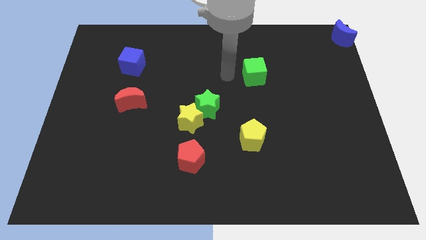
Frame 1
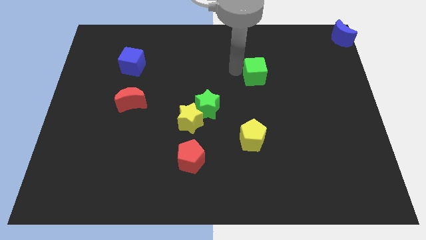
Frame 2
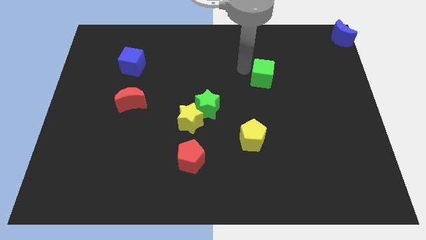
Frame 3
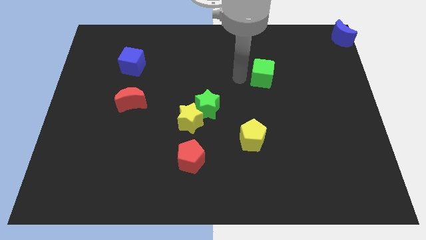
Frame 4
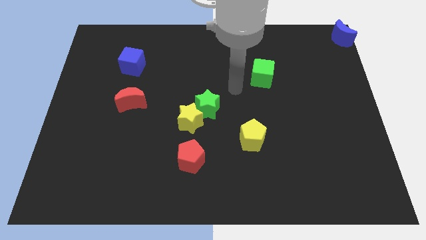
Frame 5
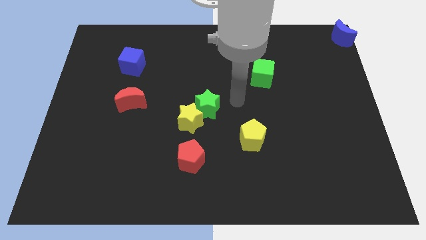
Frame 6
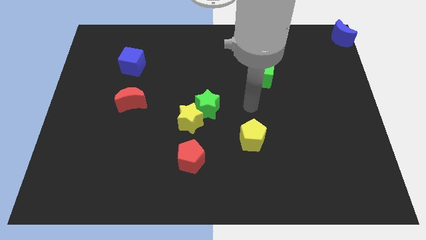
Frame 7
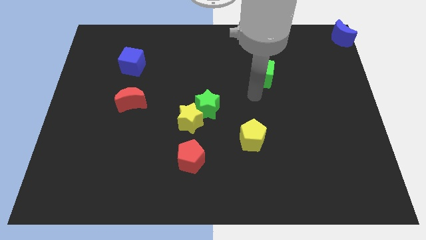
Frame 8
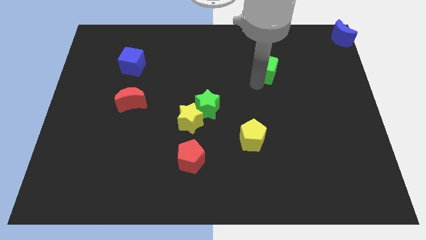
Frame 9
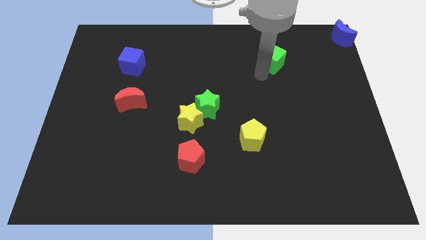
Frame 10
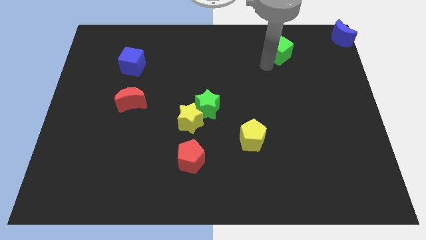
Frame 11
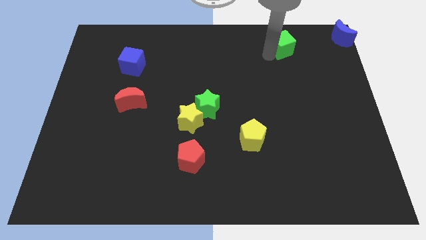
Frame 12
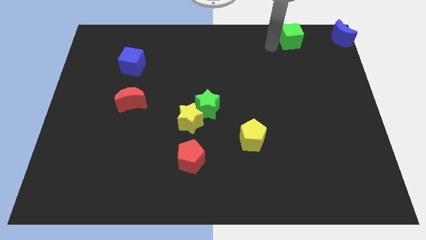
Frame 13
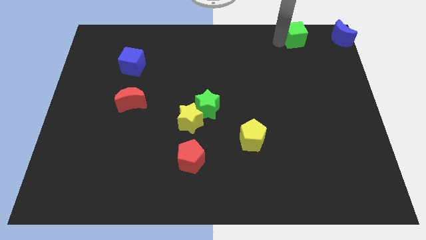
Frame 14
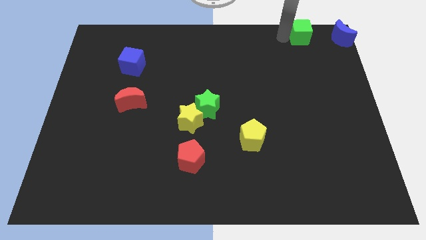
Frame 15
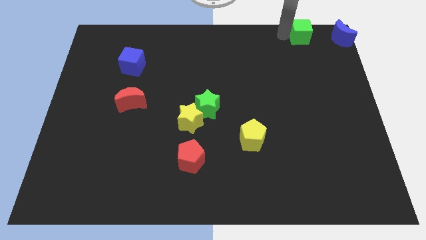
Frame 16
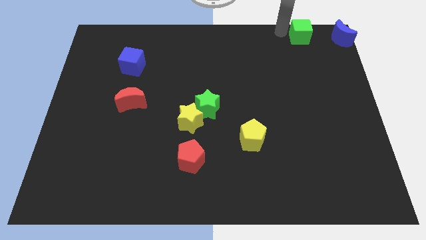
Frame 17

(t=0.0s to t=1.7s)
push the green cube towards blue moon

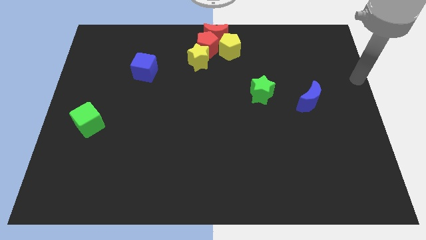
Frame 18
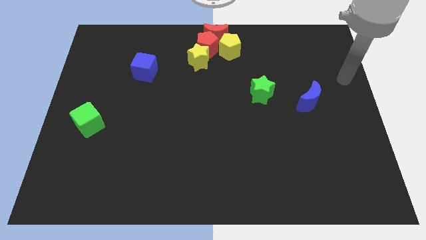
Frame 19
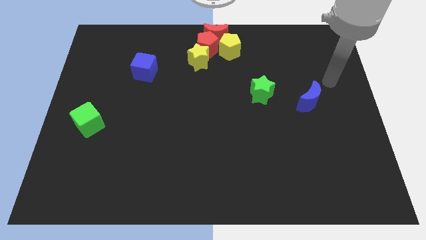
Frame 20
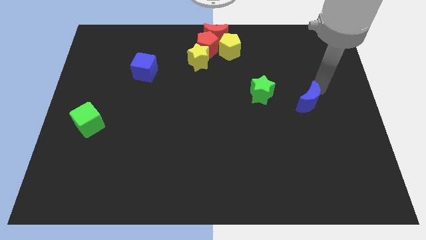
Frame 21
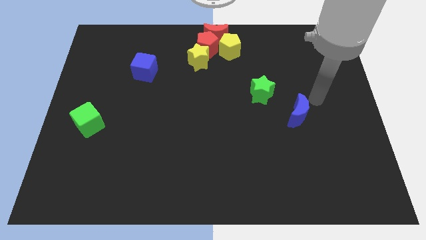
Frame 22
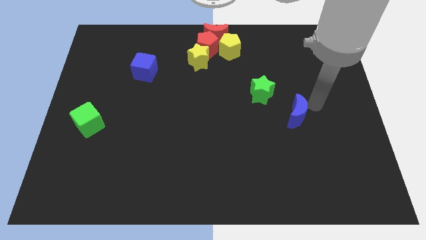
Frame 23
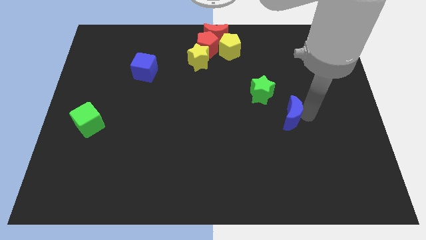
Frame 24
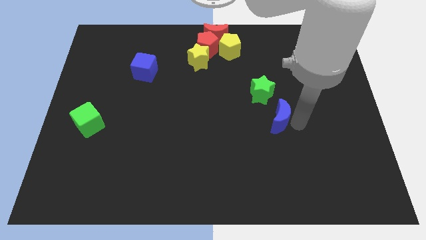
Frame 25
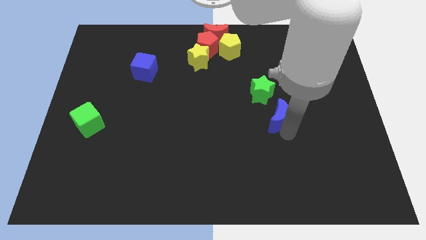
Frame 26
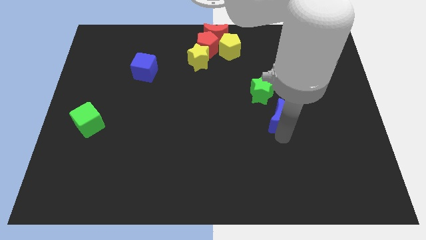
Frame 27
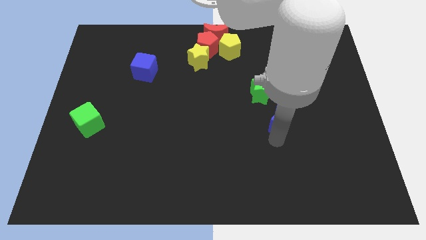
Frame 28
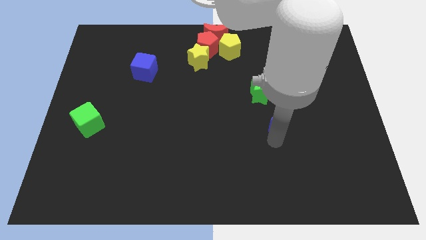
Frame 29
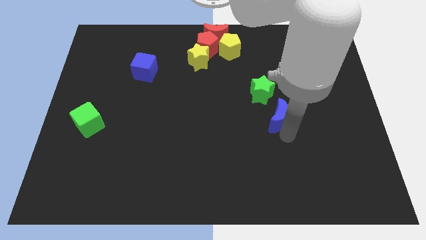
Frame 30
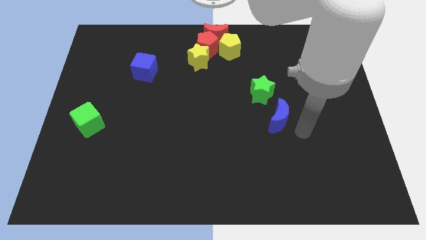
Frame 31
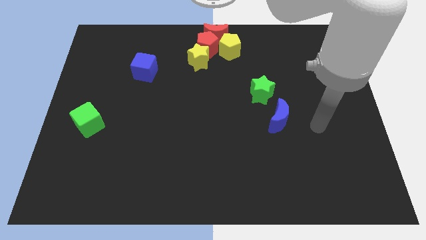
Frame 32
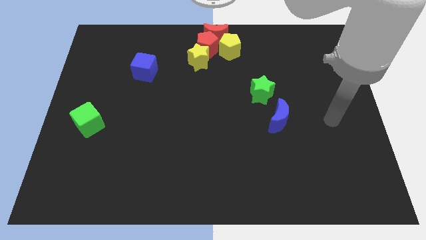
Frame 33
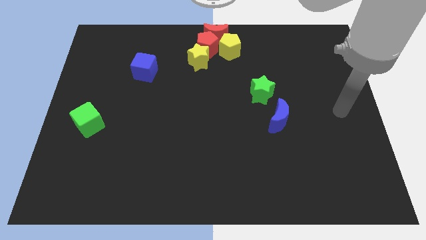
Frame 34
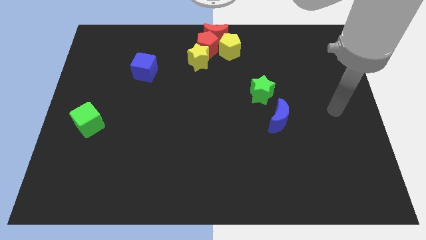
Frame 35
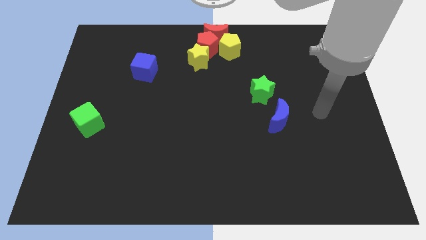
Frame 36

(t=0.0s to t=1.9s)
push the blue crescent

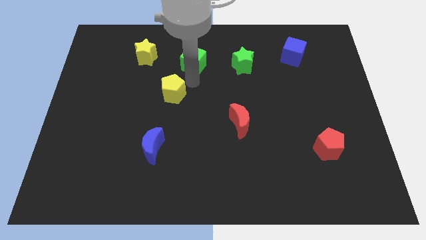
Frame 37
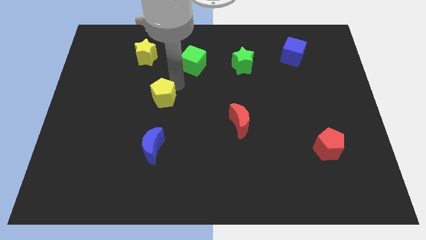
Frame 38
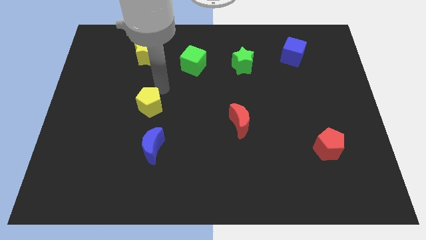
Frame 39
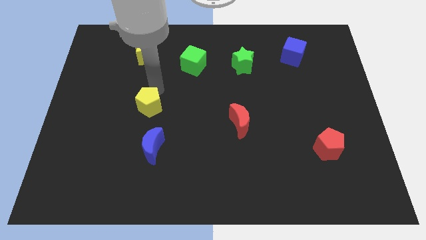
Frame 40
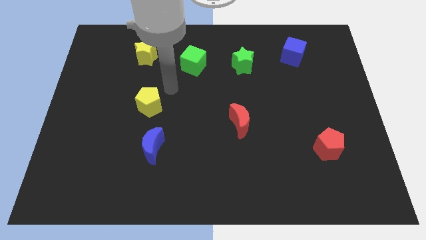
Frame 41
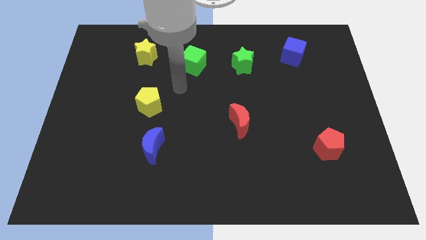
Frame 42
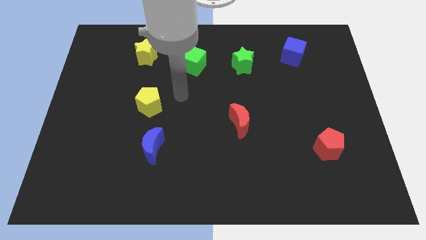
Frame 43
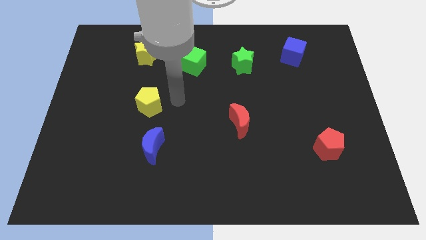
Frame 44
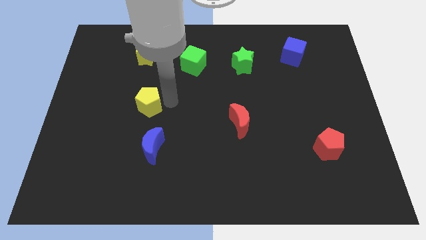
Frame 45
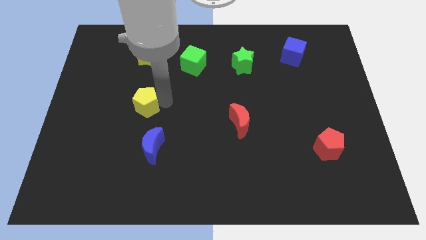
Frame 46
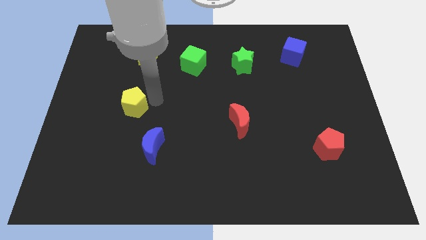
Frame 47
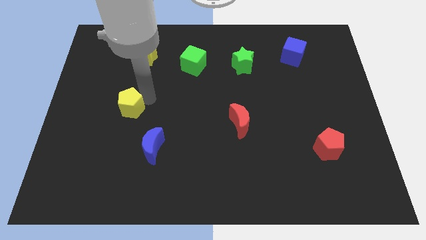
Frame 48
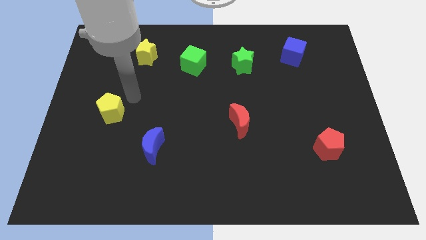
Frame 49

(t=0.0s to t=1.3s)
put the yellow pentagon diagonally to the top left side of the blue crescent

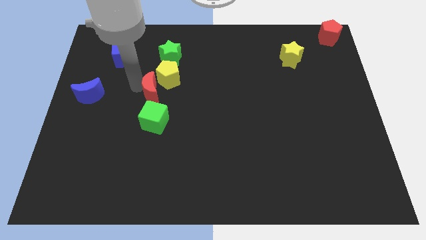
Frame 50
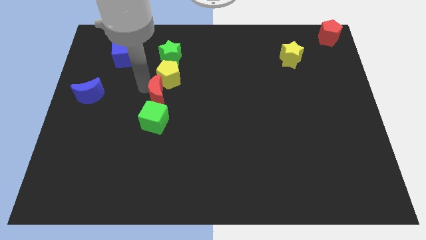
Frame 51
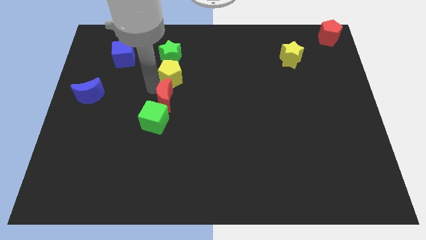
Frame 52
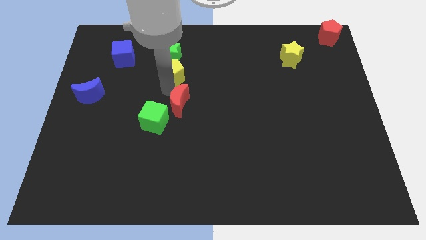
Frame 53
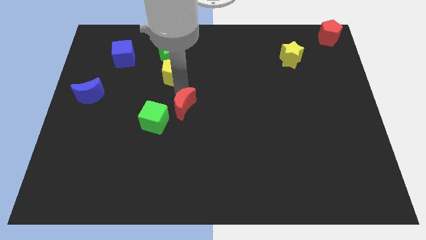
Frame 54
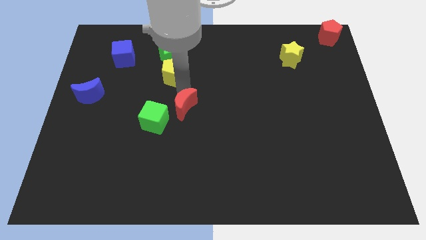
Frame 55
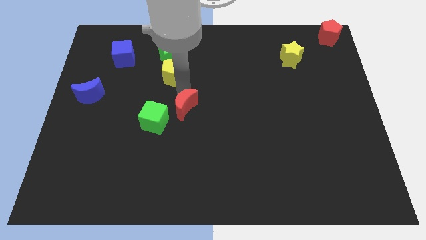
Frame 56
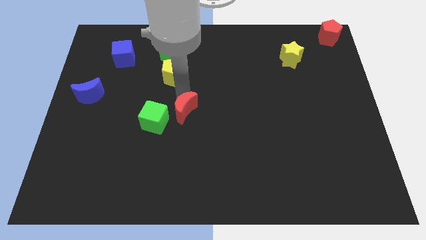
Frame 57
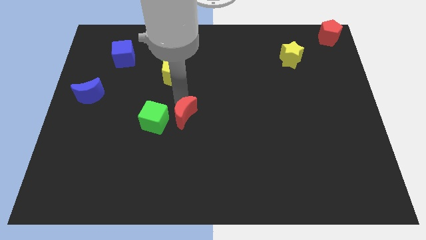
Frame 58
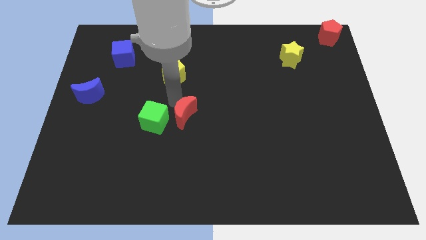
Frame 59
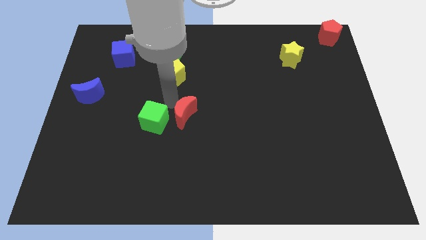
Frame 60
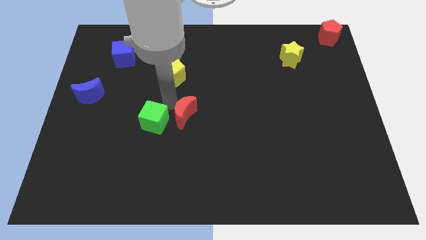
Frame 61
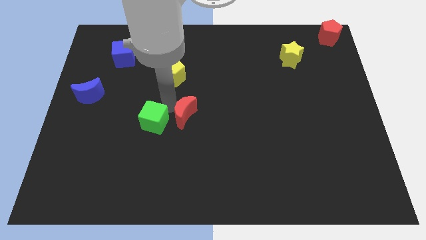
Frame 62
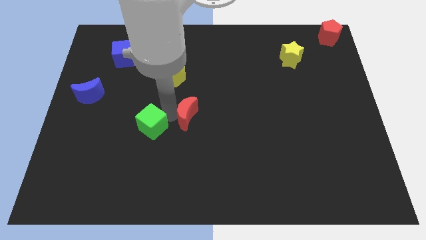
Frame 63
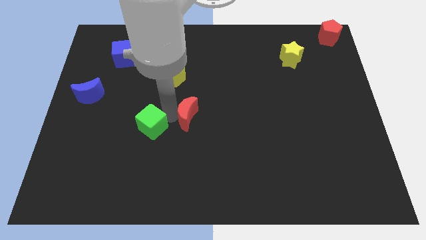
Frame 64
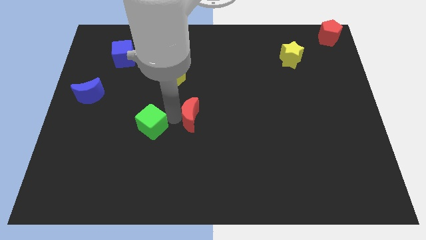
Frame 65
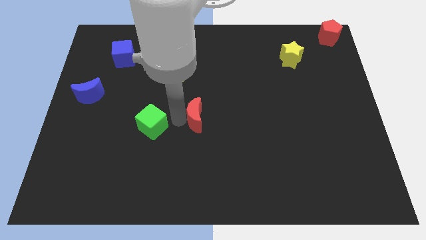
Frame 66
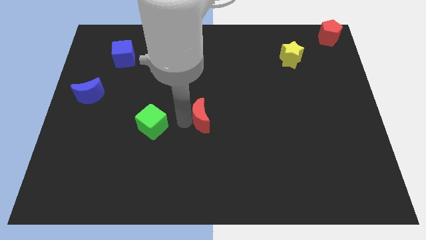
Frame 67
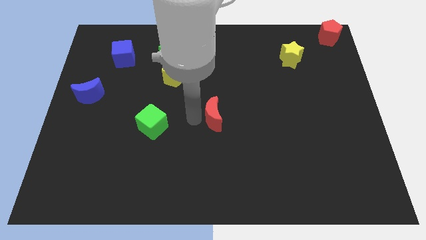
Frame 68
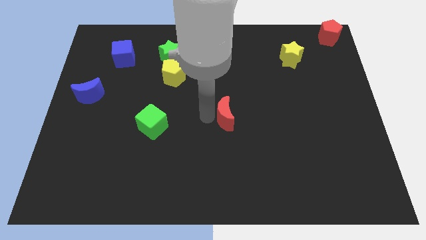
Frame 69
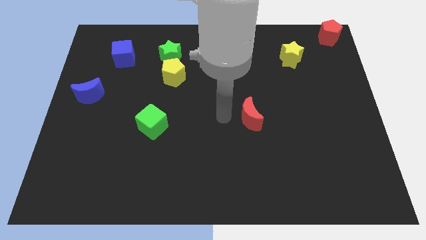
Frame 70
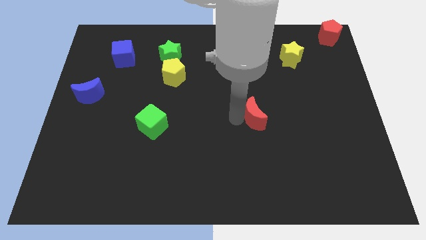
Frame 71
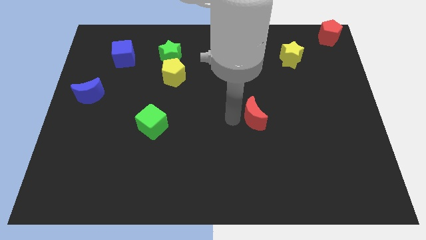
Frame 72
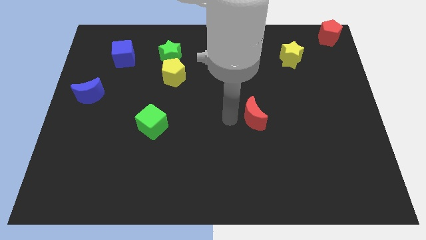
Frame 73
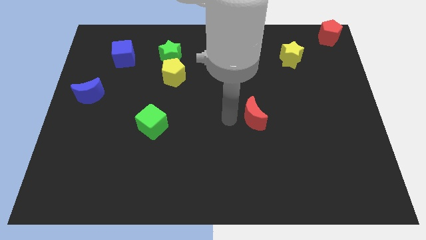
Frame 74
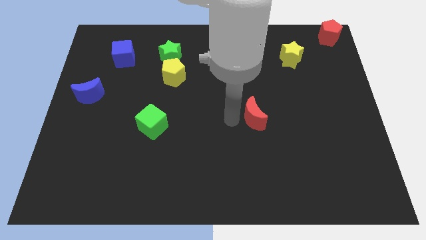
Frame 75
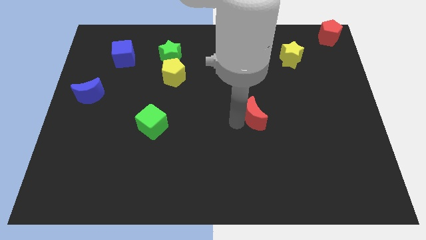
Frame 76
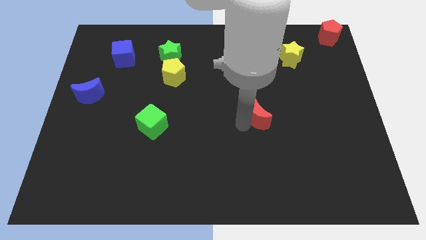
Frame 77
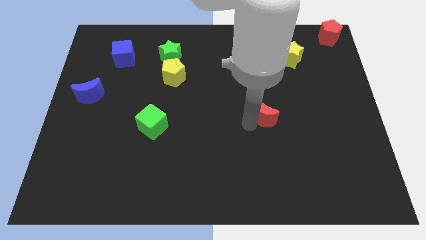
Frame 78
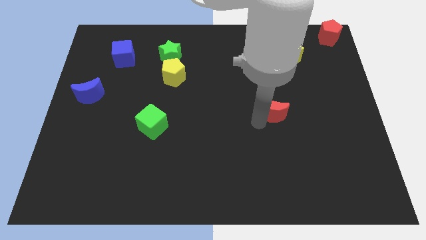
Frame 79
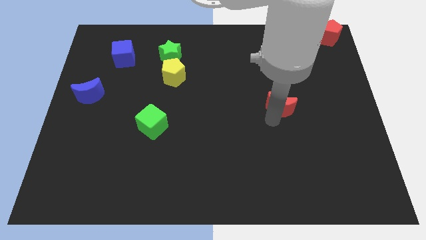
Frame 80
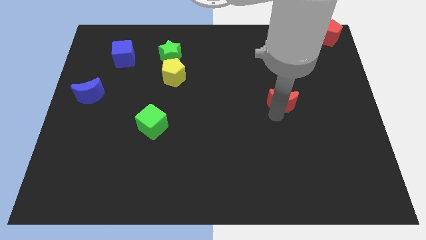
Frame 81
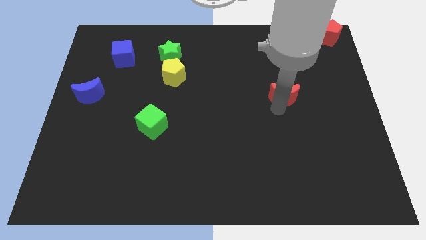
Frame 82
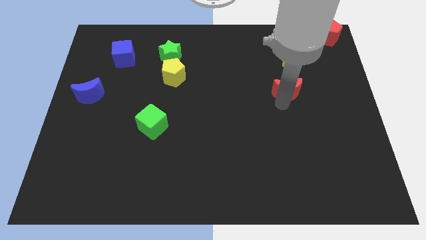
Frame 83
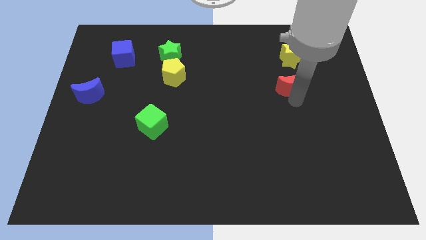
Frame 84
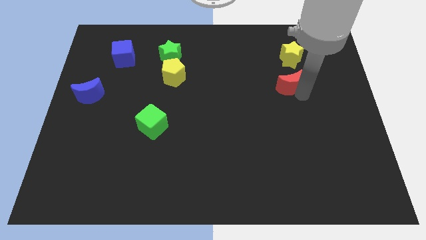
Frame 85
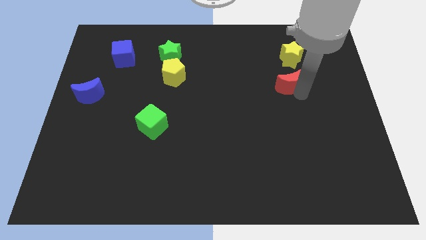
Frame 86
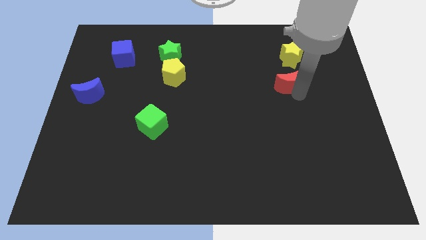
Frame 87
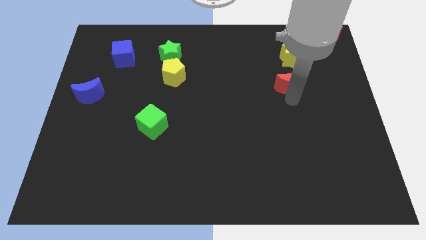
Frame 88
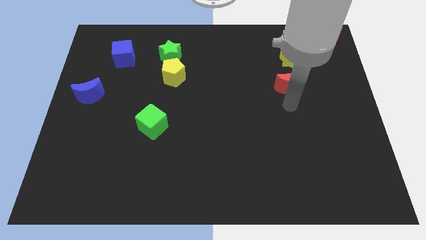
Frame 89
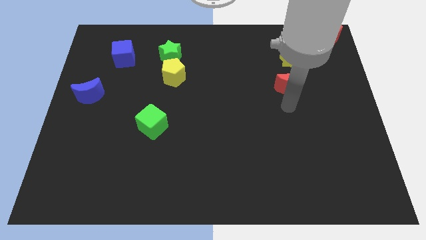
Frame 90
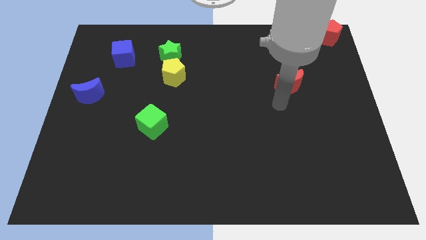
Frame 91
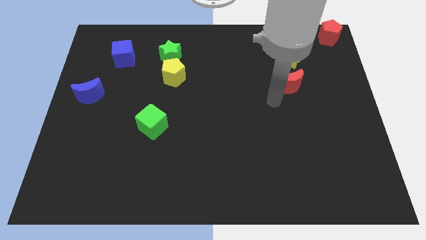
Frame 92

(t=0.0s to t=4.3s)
place the red moon below the yellow star
